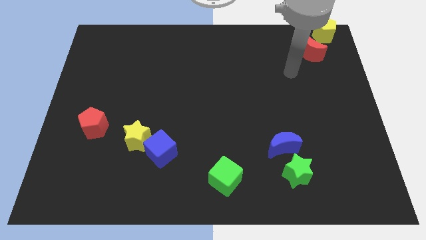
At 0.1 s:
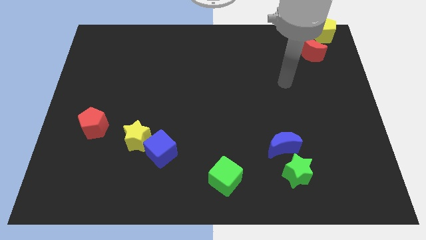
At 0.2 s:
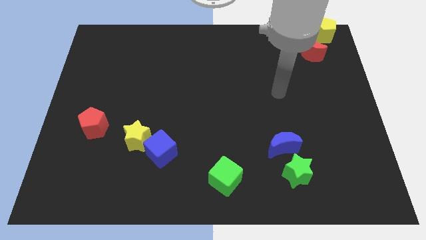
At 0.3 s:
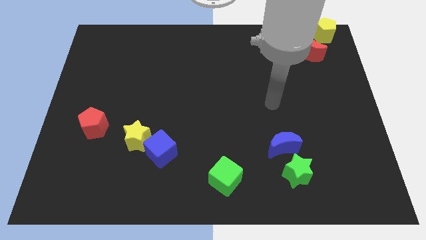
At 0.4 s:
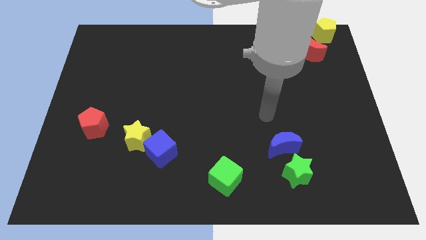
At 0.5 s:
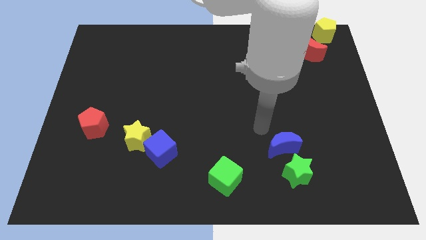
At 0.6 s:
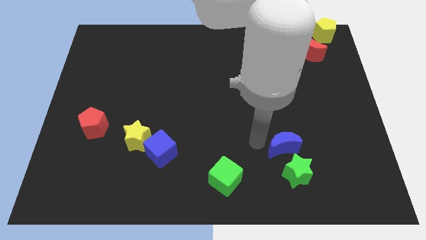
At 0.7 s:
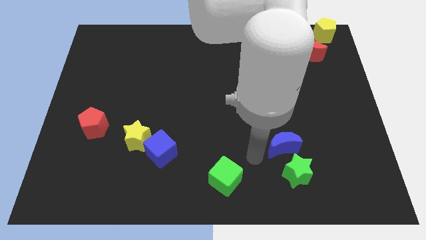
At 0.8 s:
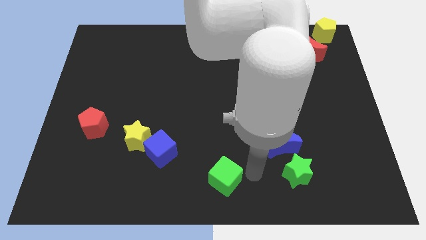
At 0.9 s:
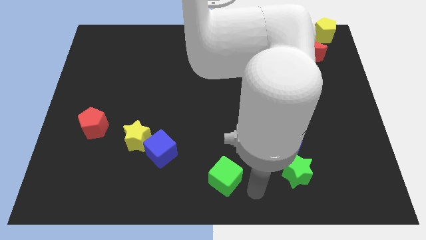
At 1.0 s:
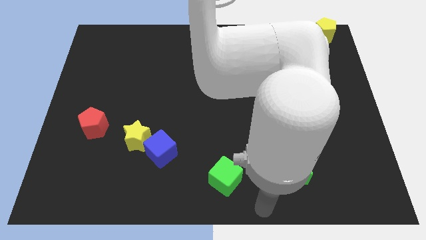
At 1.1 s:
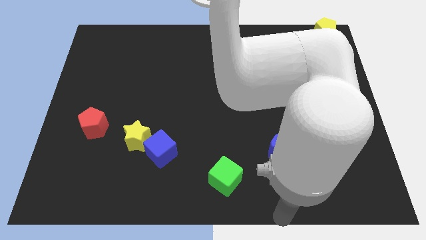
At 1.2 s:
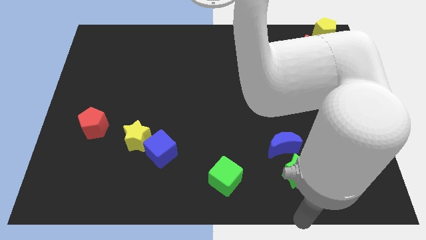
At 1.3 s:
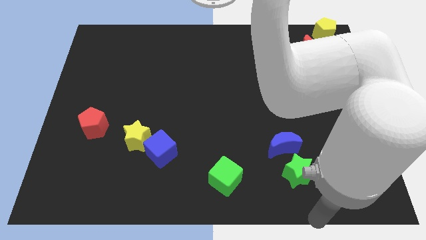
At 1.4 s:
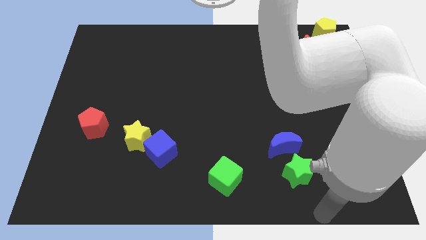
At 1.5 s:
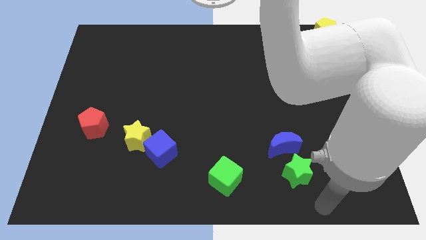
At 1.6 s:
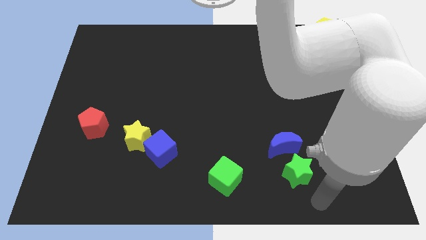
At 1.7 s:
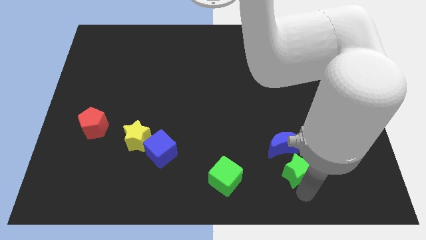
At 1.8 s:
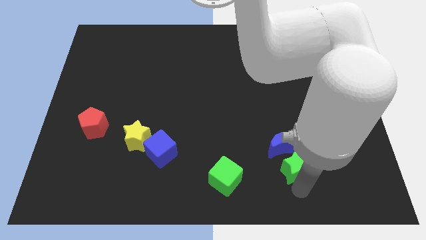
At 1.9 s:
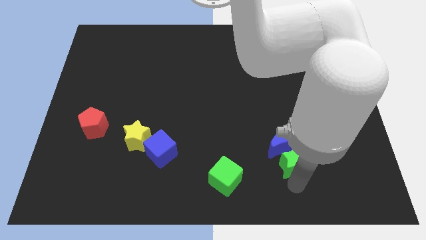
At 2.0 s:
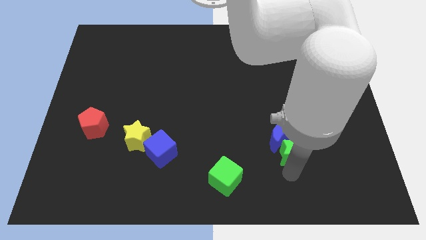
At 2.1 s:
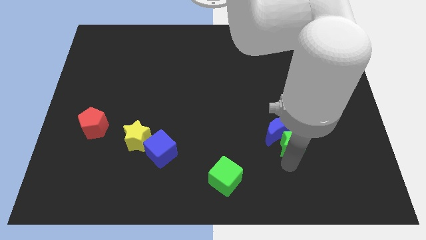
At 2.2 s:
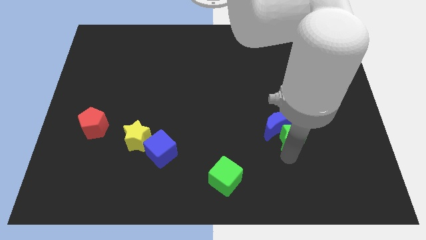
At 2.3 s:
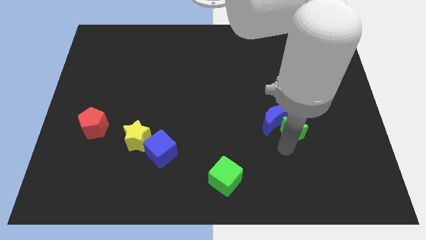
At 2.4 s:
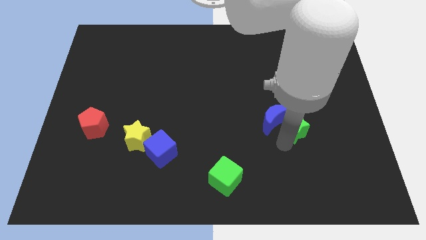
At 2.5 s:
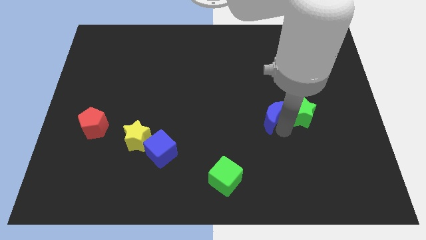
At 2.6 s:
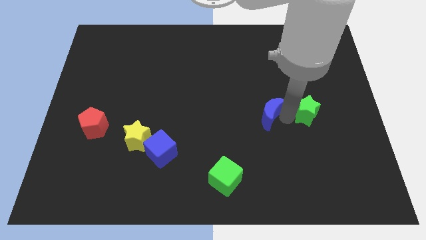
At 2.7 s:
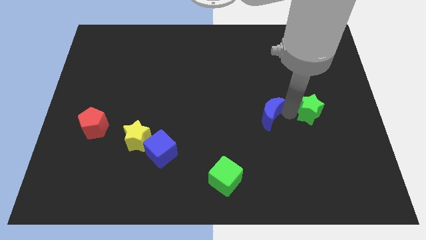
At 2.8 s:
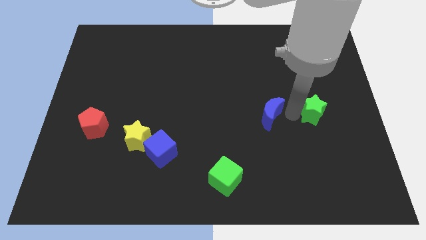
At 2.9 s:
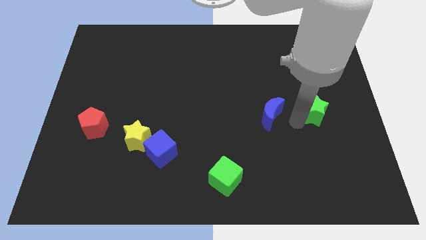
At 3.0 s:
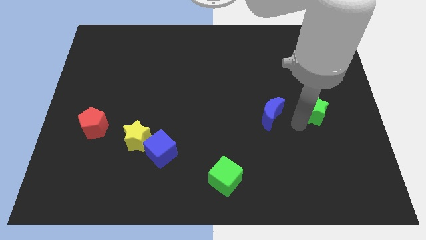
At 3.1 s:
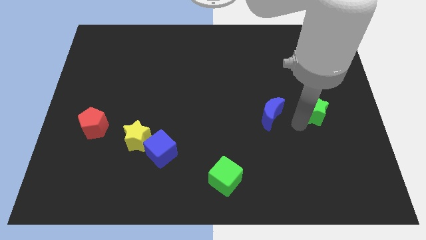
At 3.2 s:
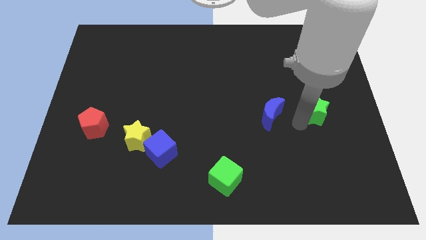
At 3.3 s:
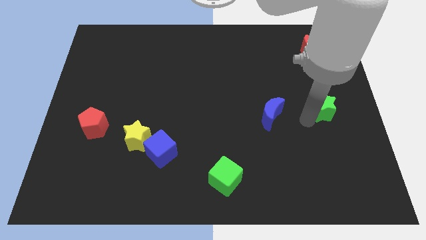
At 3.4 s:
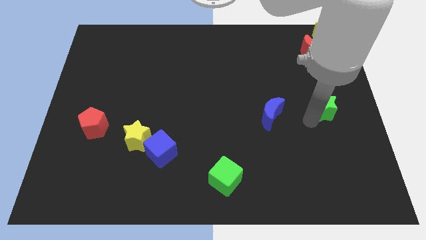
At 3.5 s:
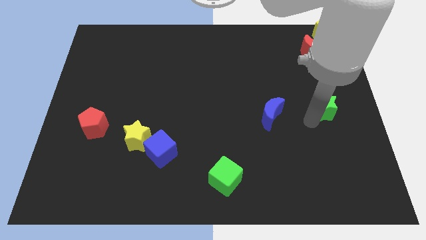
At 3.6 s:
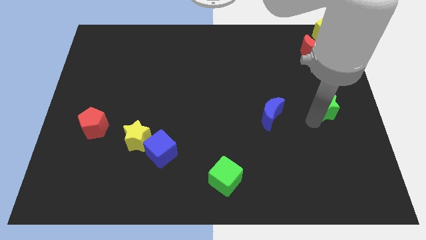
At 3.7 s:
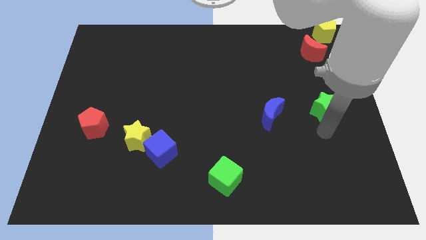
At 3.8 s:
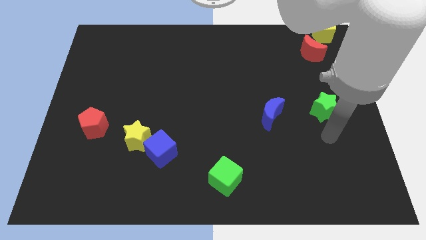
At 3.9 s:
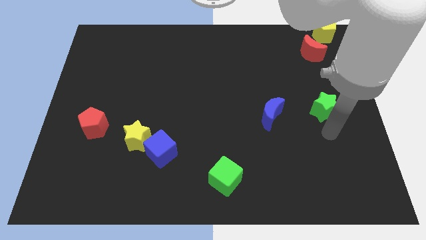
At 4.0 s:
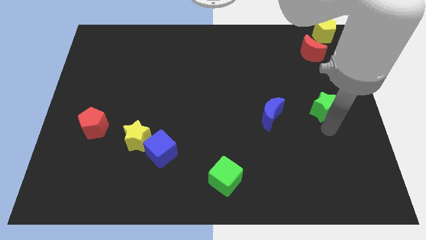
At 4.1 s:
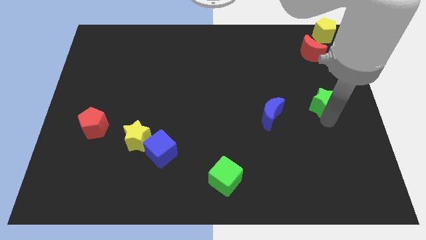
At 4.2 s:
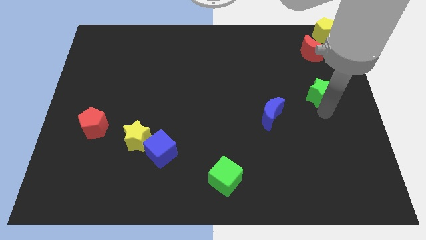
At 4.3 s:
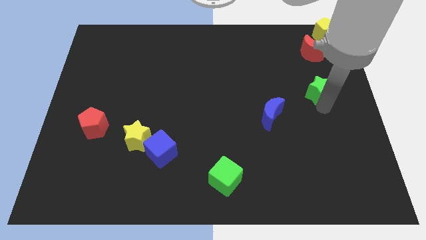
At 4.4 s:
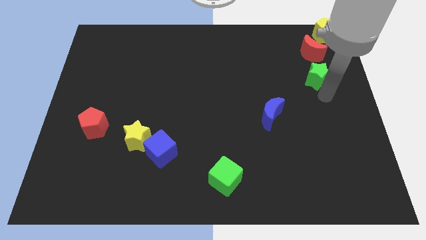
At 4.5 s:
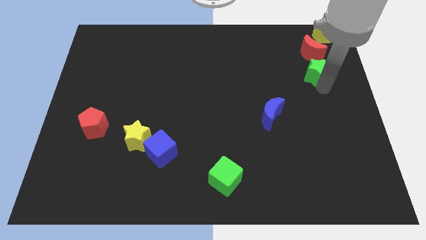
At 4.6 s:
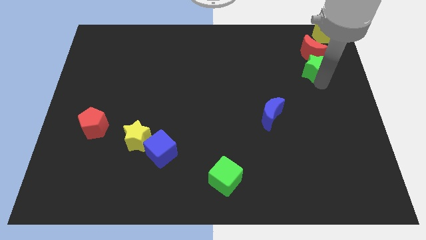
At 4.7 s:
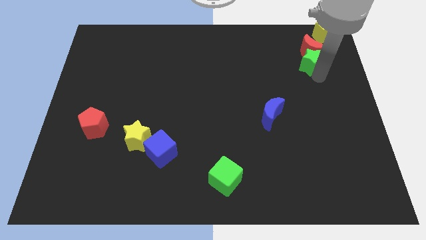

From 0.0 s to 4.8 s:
drag the green star into the bottom side of the red crescent

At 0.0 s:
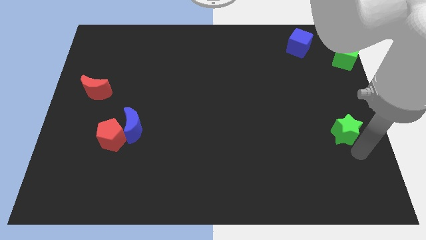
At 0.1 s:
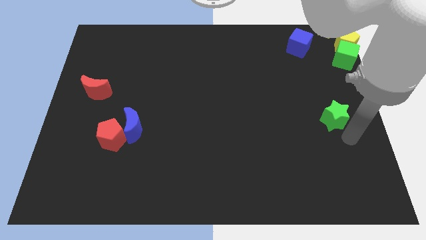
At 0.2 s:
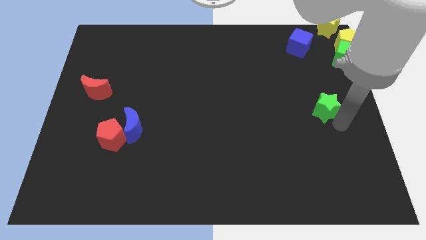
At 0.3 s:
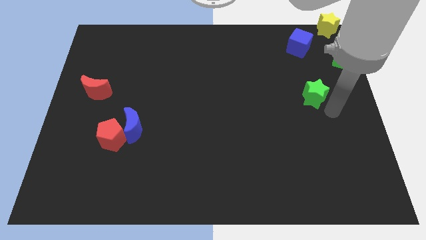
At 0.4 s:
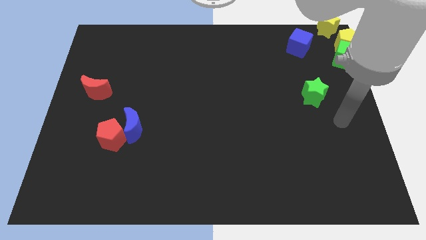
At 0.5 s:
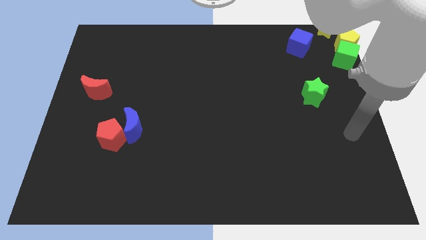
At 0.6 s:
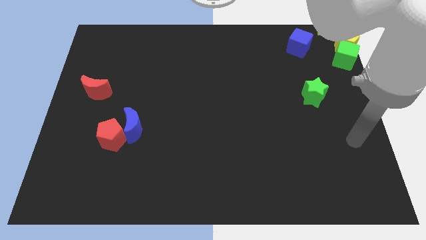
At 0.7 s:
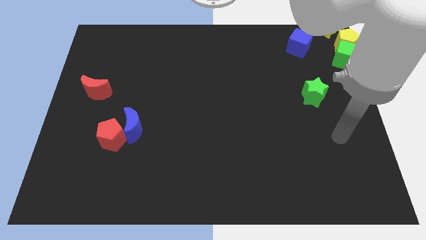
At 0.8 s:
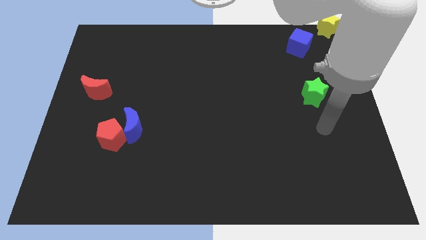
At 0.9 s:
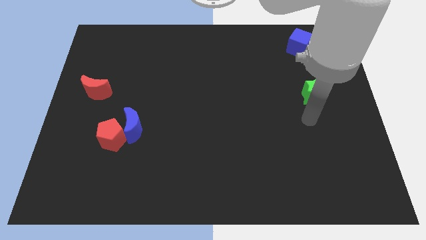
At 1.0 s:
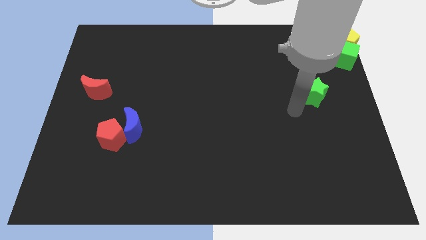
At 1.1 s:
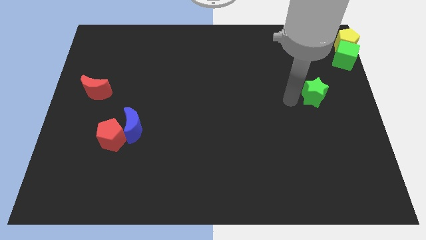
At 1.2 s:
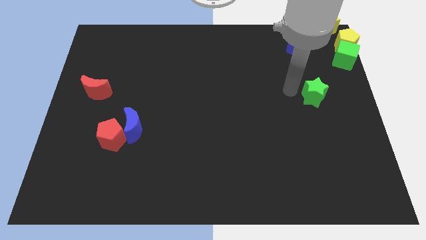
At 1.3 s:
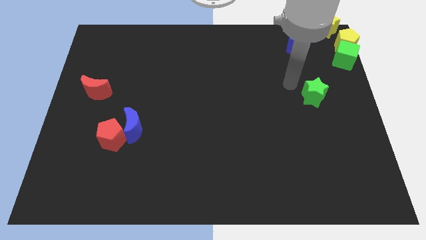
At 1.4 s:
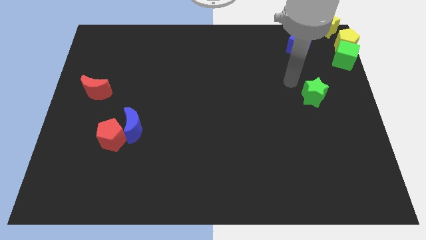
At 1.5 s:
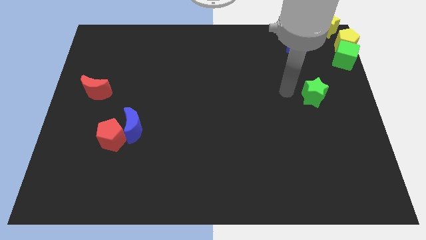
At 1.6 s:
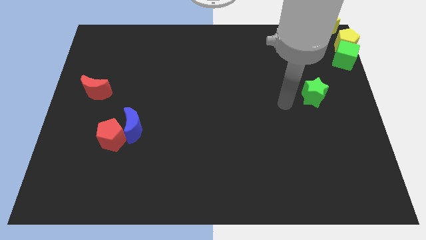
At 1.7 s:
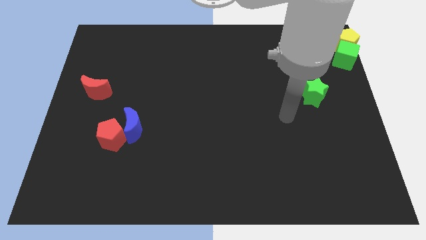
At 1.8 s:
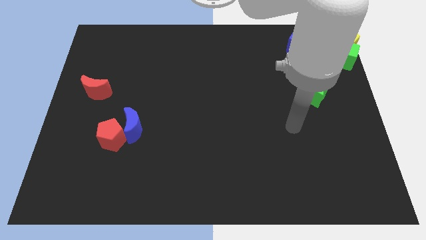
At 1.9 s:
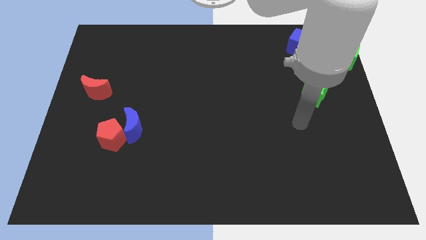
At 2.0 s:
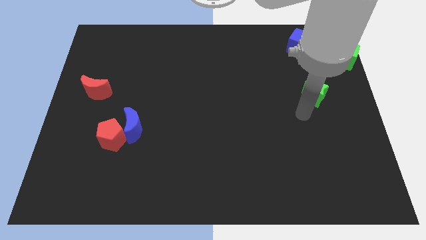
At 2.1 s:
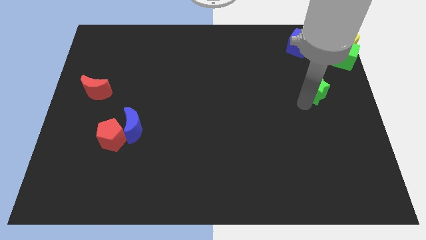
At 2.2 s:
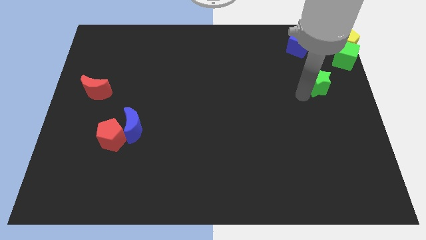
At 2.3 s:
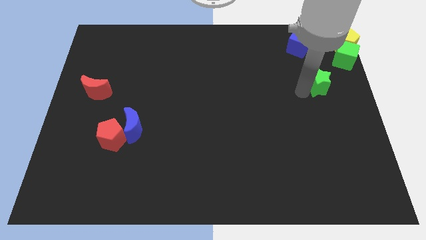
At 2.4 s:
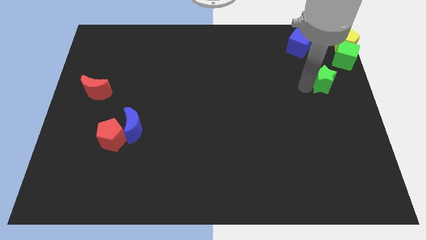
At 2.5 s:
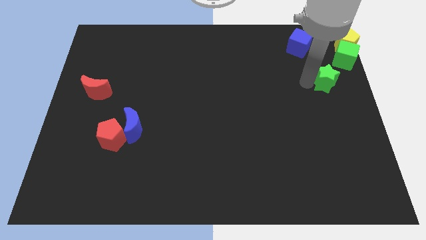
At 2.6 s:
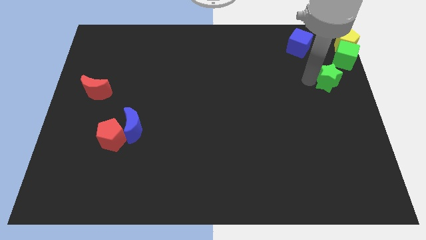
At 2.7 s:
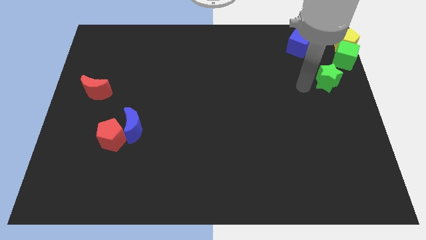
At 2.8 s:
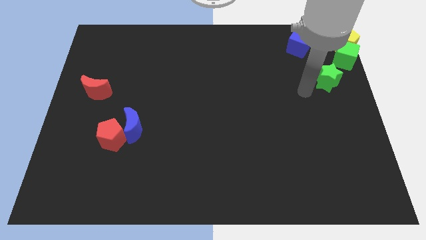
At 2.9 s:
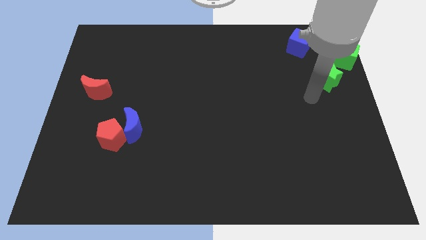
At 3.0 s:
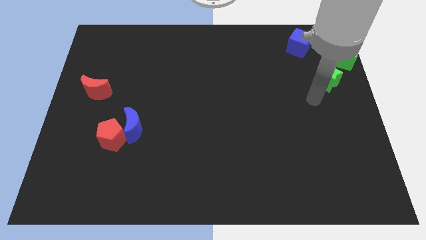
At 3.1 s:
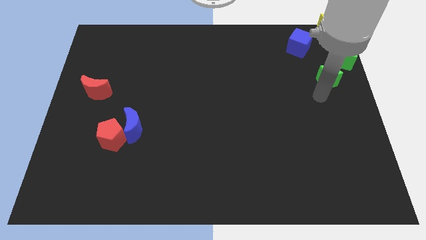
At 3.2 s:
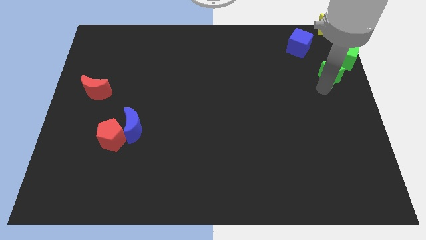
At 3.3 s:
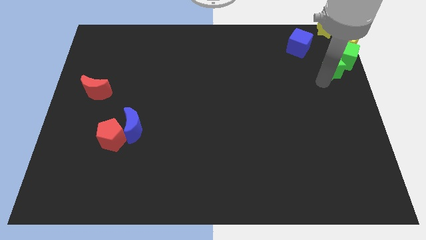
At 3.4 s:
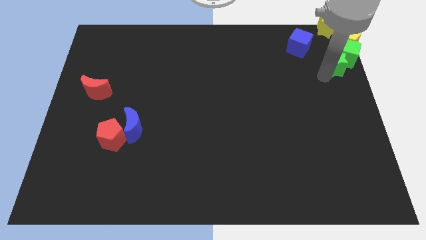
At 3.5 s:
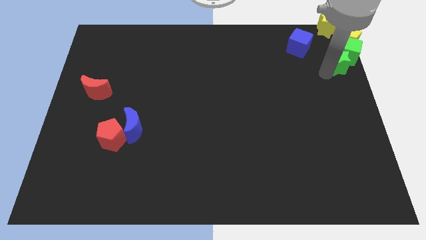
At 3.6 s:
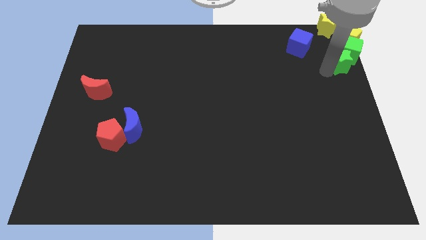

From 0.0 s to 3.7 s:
push the green star into the green cube

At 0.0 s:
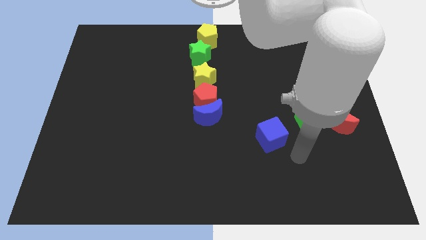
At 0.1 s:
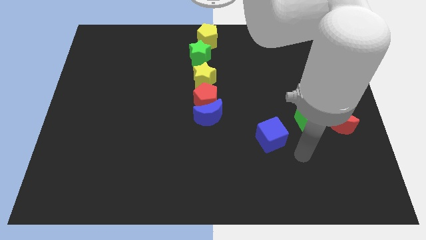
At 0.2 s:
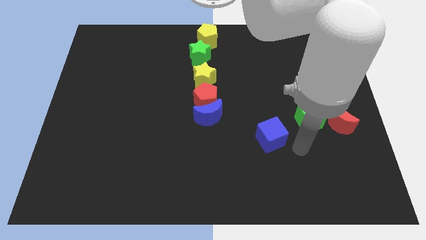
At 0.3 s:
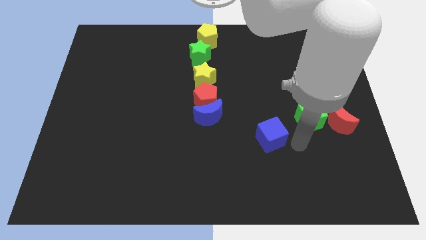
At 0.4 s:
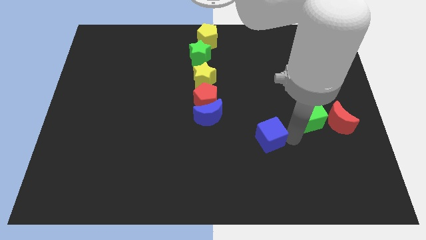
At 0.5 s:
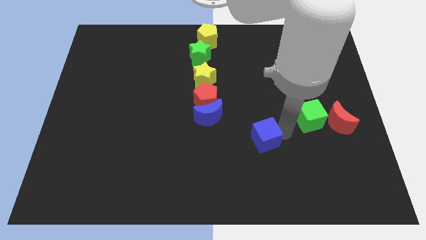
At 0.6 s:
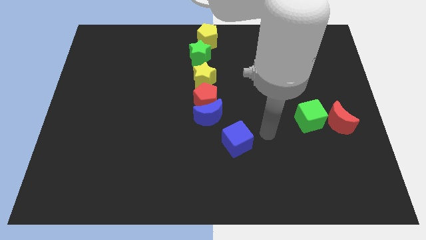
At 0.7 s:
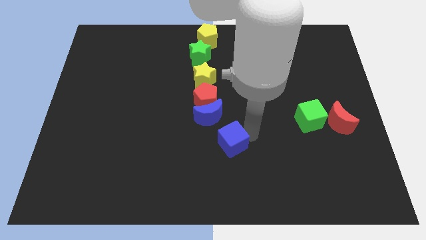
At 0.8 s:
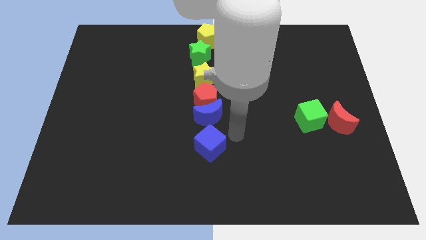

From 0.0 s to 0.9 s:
place the blue cube below the blue moon
